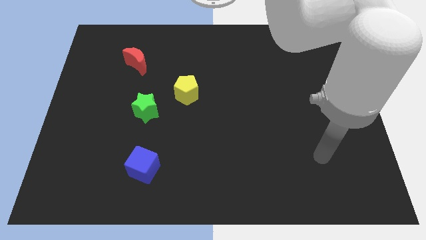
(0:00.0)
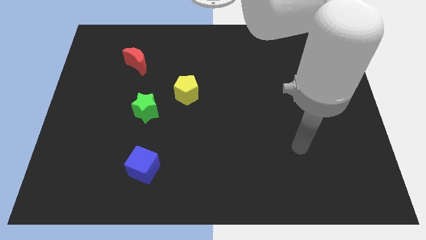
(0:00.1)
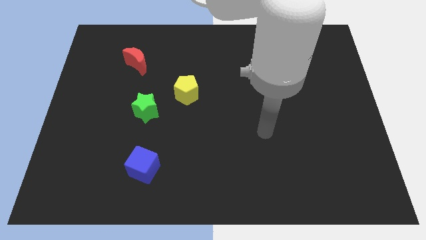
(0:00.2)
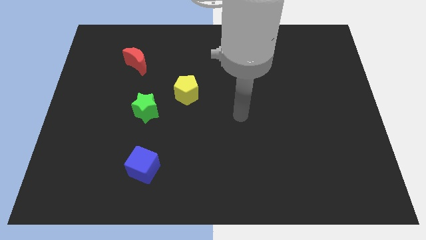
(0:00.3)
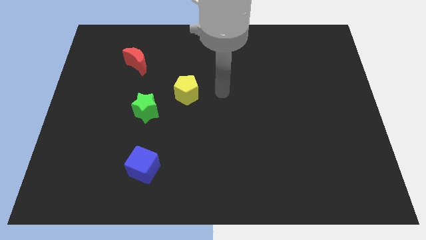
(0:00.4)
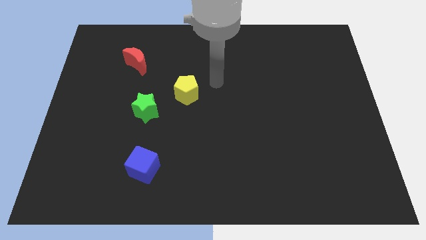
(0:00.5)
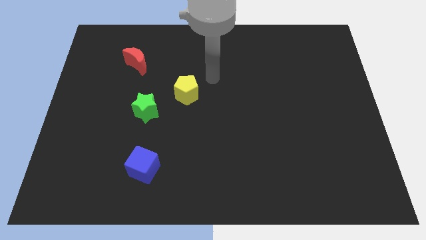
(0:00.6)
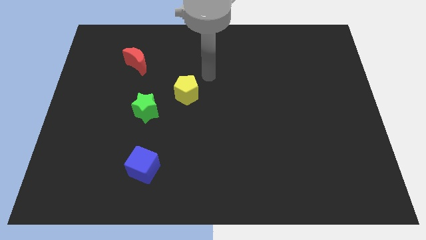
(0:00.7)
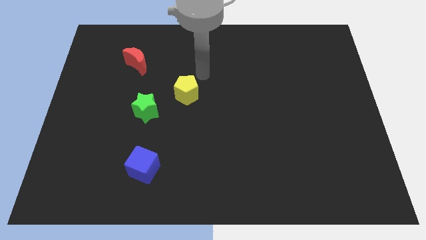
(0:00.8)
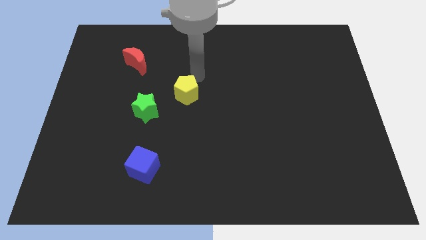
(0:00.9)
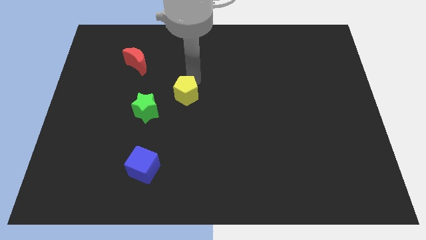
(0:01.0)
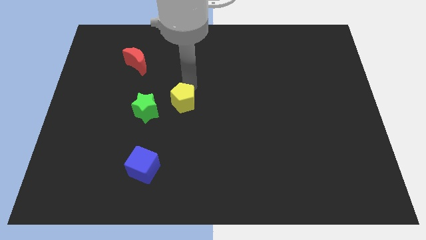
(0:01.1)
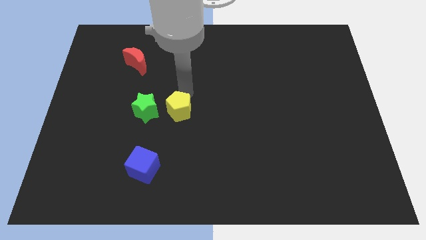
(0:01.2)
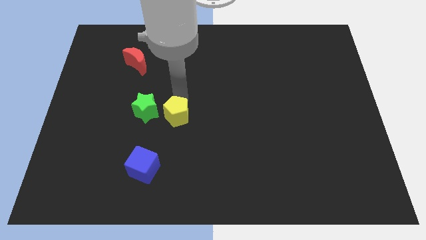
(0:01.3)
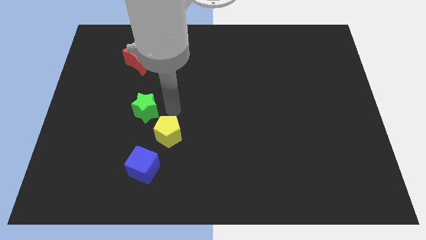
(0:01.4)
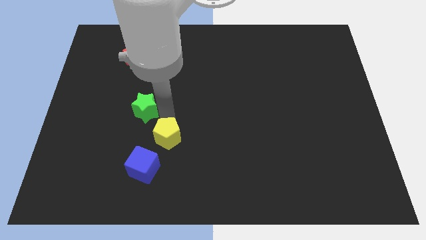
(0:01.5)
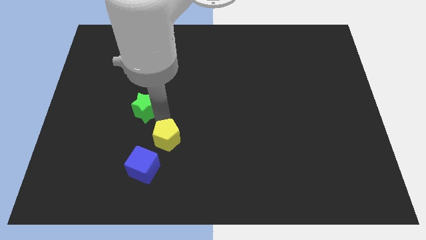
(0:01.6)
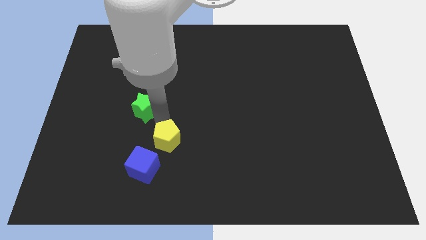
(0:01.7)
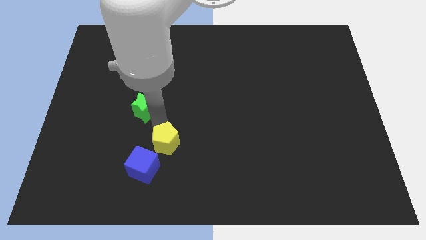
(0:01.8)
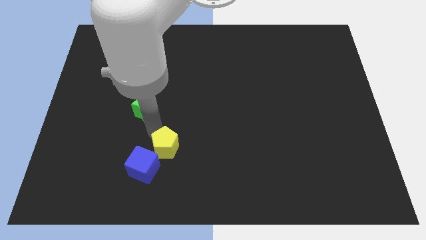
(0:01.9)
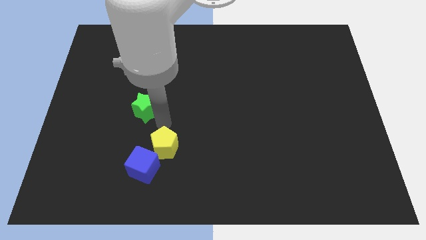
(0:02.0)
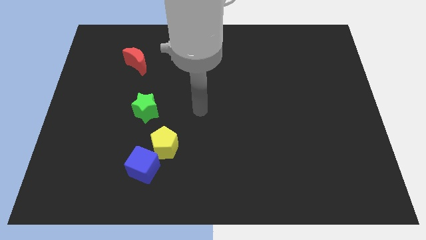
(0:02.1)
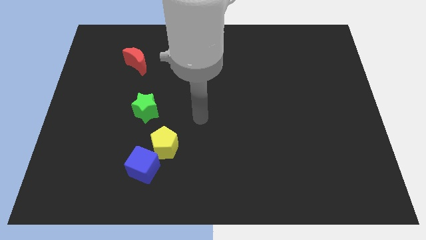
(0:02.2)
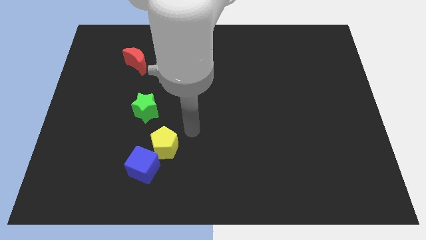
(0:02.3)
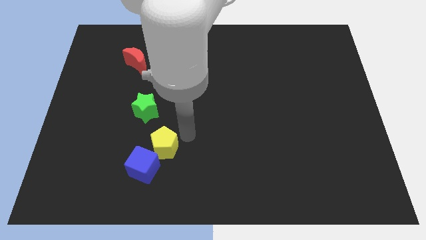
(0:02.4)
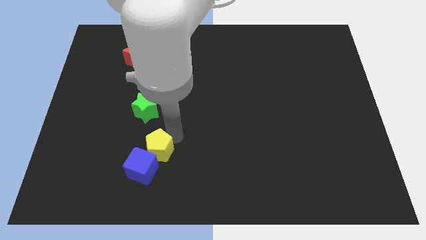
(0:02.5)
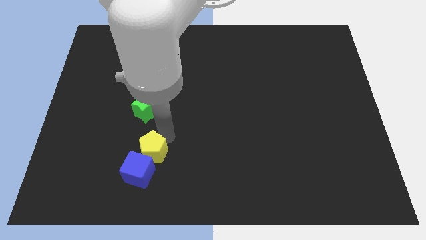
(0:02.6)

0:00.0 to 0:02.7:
move the yellow pentagon to the cube

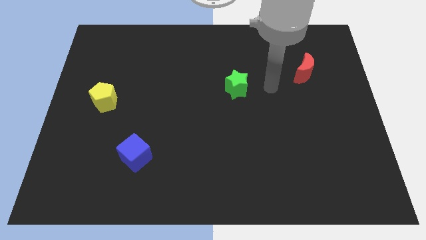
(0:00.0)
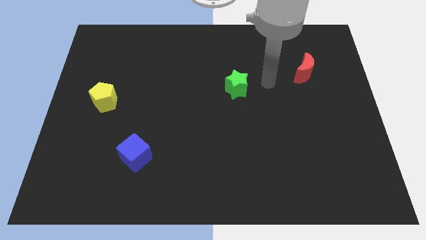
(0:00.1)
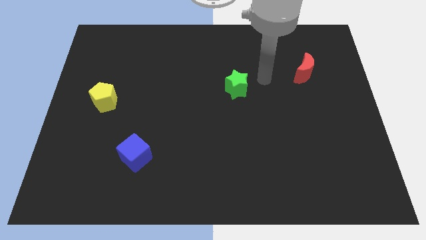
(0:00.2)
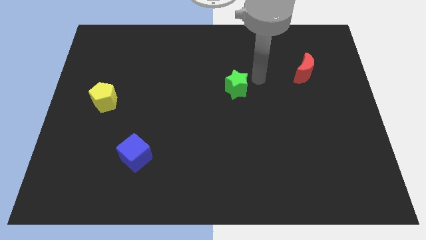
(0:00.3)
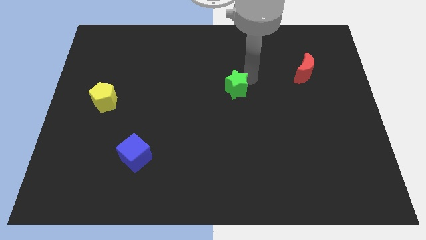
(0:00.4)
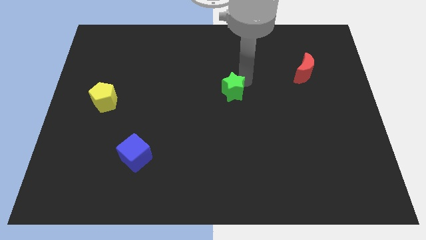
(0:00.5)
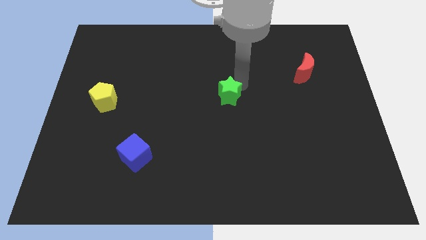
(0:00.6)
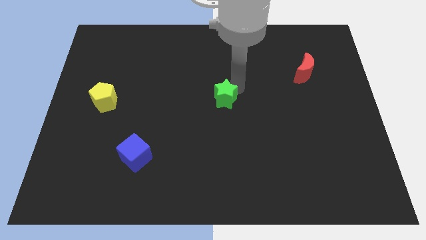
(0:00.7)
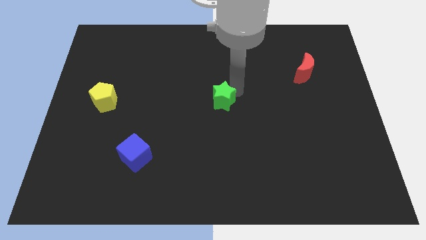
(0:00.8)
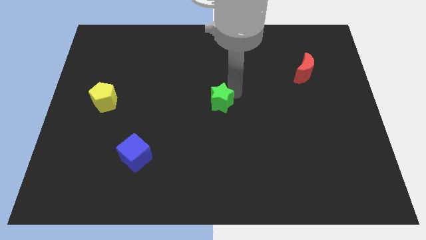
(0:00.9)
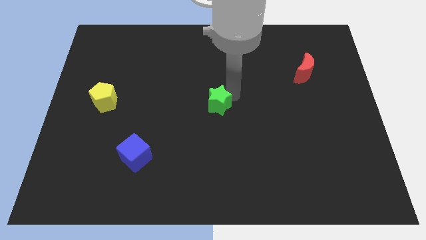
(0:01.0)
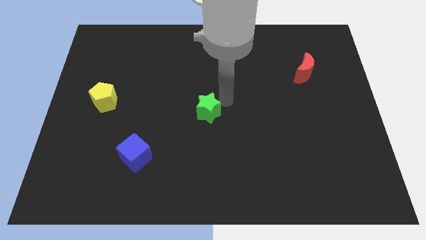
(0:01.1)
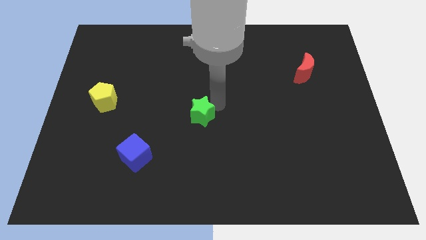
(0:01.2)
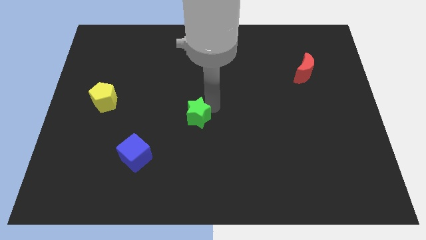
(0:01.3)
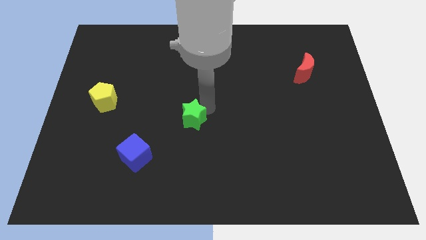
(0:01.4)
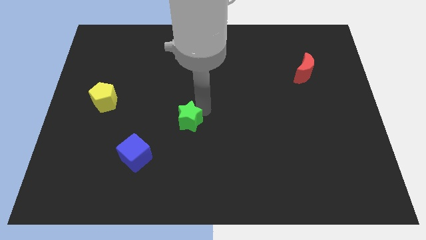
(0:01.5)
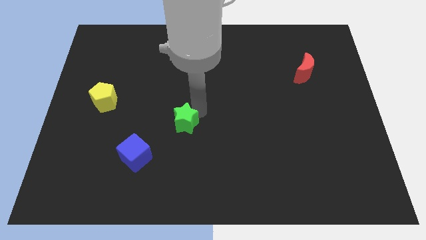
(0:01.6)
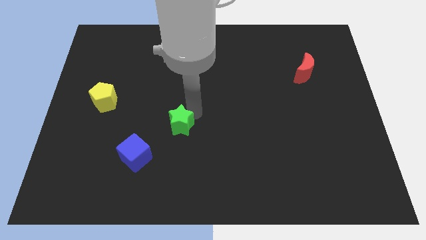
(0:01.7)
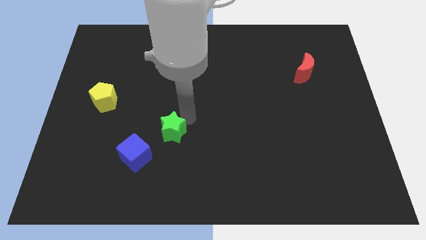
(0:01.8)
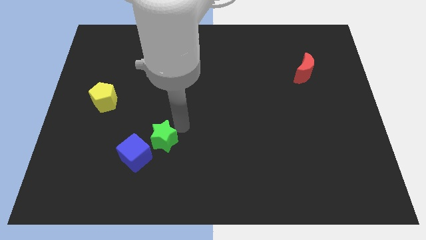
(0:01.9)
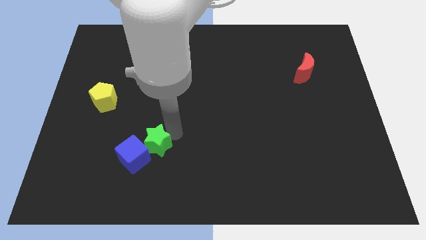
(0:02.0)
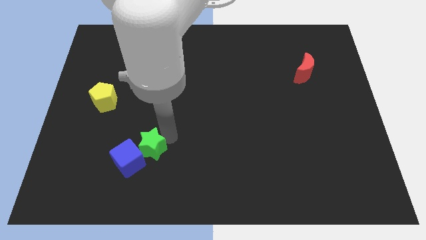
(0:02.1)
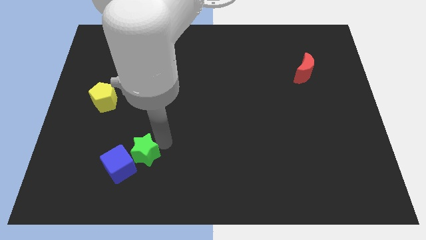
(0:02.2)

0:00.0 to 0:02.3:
move the green star towards the cube

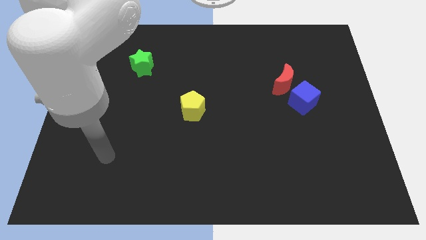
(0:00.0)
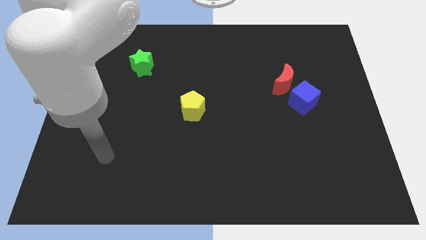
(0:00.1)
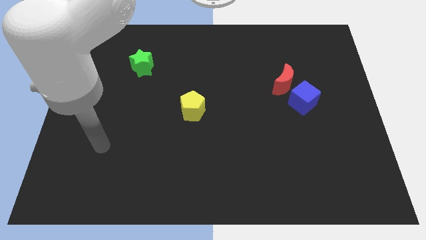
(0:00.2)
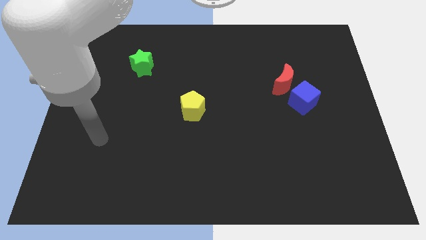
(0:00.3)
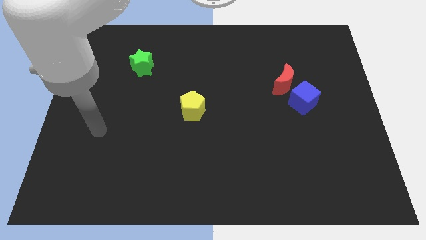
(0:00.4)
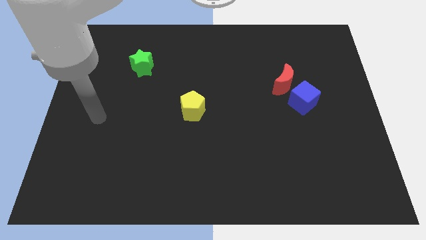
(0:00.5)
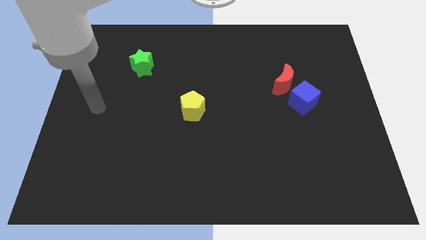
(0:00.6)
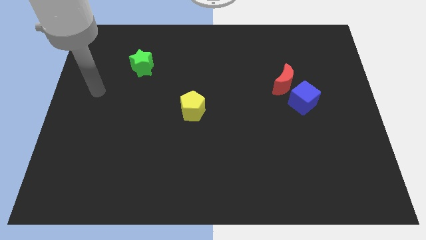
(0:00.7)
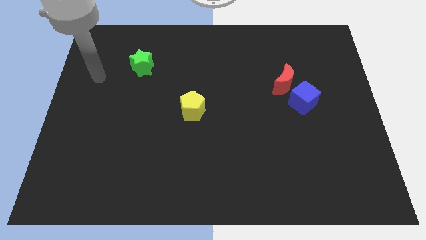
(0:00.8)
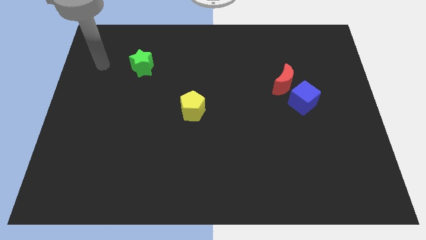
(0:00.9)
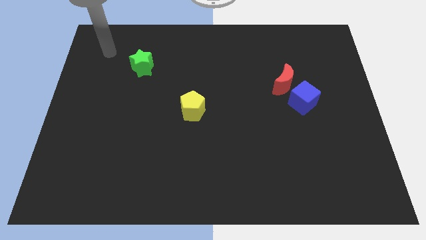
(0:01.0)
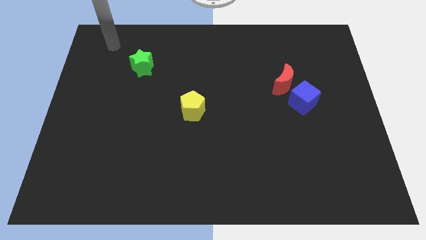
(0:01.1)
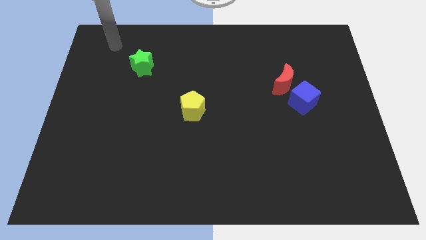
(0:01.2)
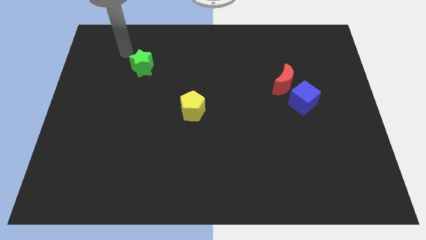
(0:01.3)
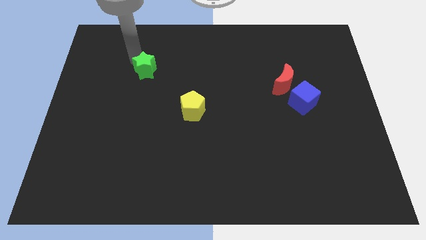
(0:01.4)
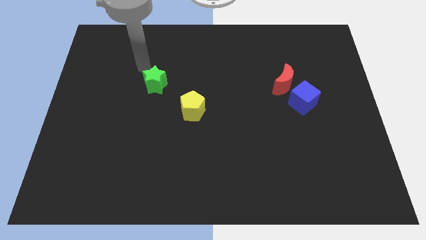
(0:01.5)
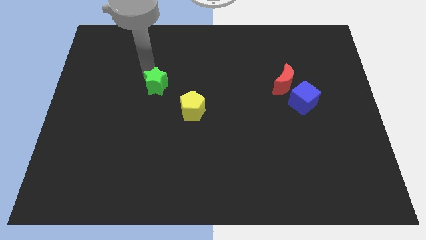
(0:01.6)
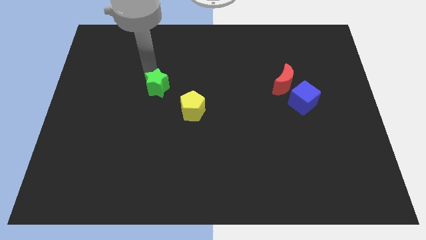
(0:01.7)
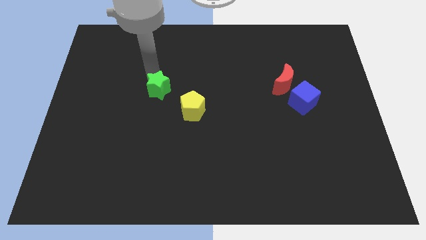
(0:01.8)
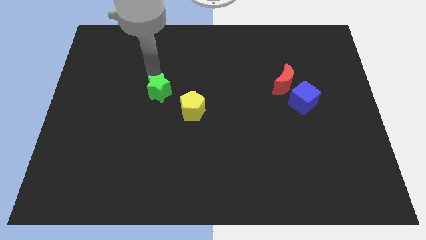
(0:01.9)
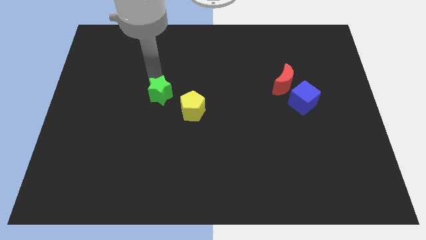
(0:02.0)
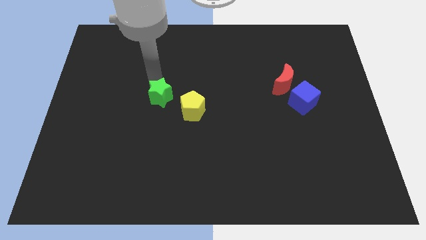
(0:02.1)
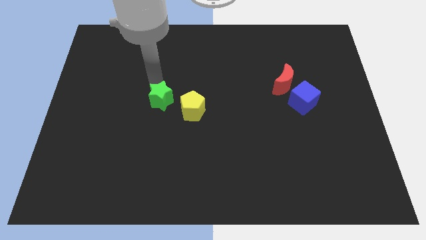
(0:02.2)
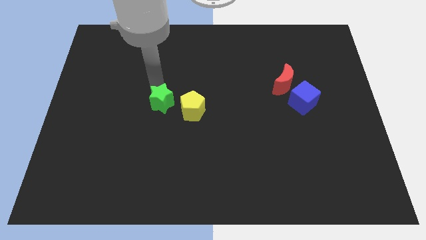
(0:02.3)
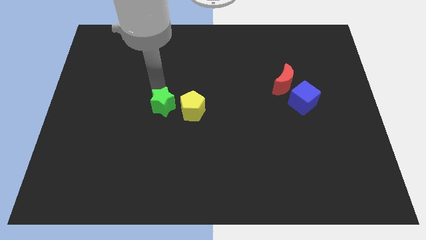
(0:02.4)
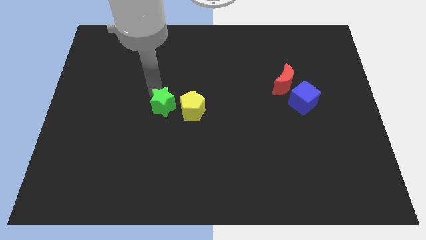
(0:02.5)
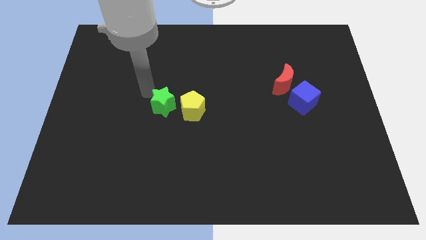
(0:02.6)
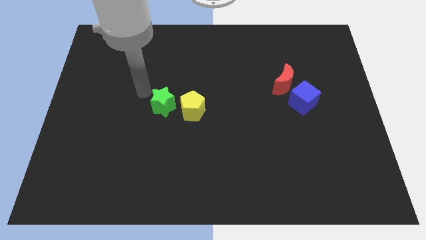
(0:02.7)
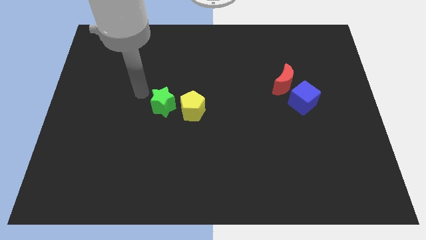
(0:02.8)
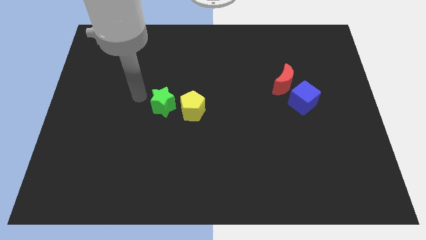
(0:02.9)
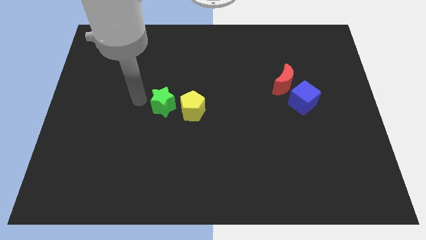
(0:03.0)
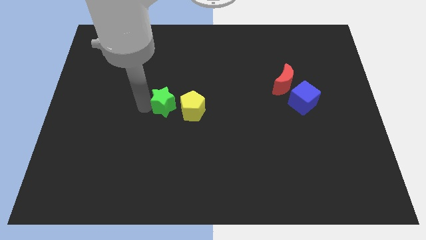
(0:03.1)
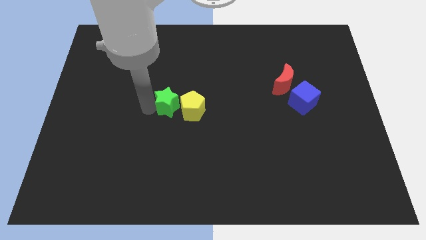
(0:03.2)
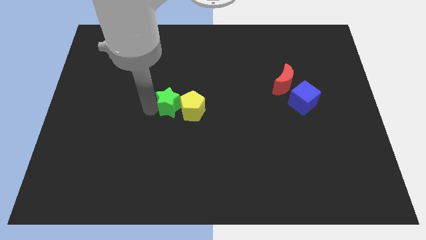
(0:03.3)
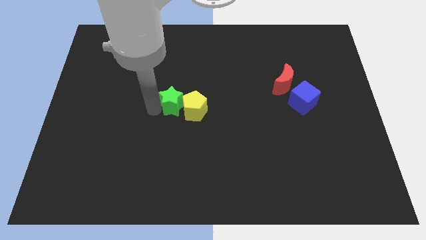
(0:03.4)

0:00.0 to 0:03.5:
move the green block towards the pentagon

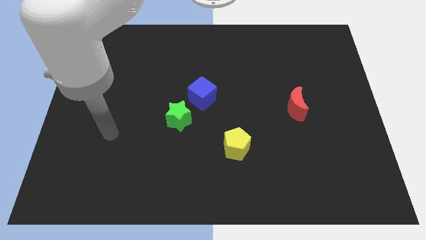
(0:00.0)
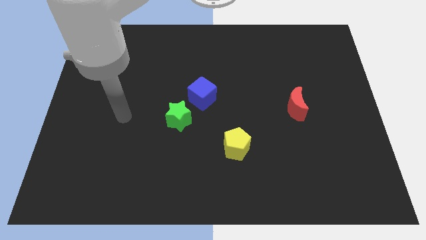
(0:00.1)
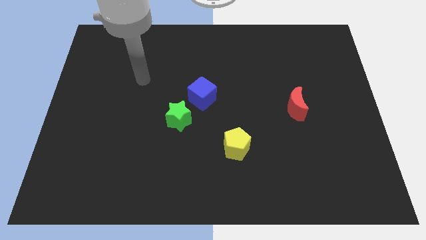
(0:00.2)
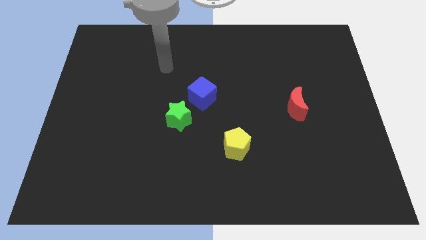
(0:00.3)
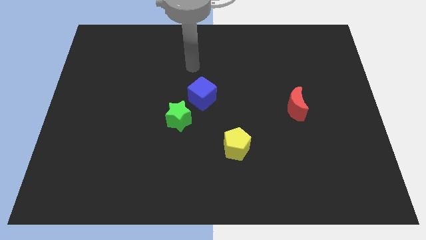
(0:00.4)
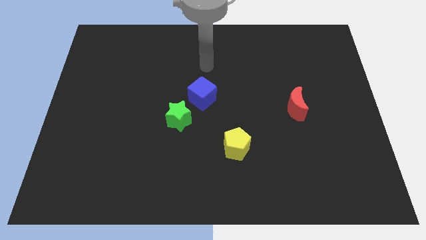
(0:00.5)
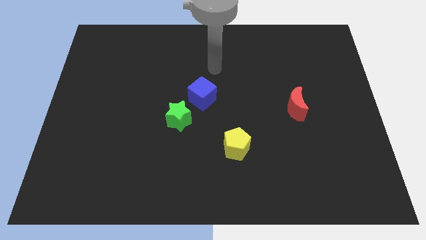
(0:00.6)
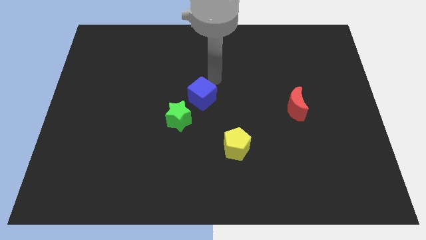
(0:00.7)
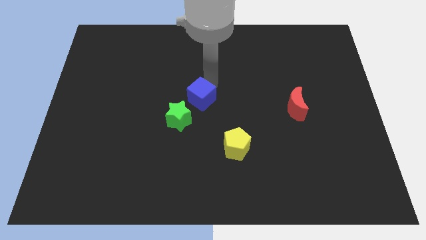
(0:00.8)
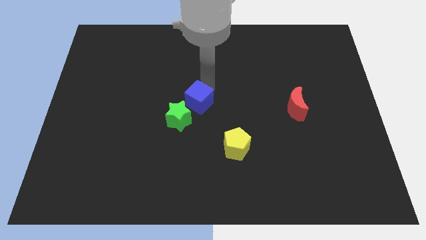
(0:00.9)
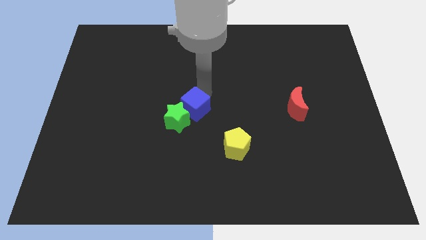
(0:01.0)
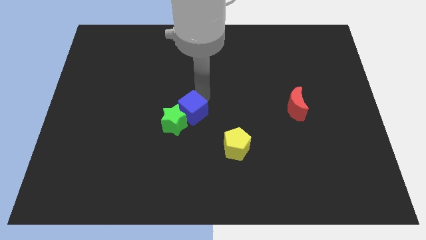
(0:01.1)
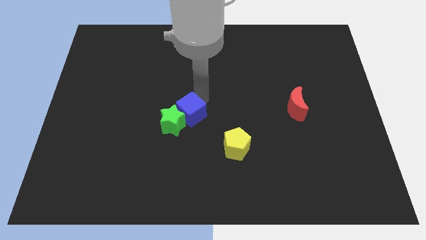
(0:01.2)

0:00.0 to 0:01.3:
slide the blue block next to the green star
